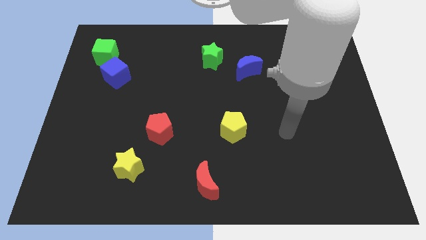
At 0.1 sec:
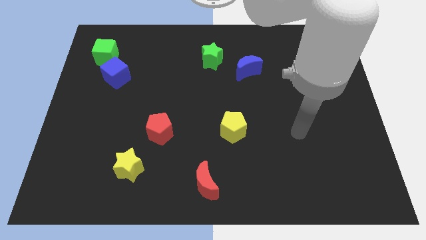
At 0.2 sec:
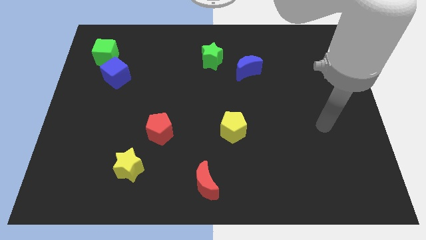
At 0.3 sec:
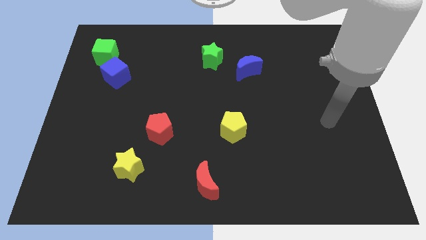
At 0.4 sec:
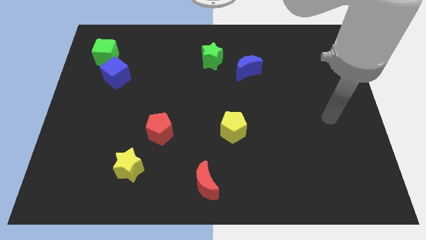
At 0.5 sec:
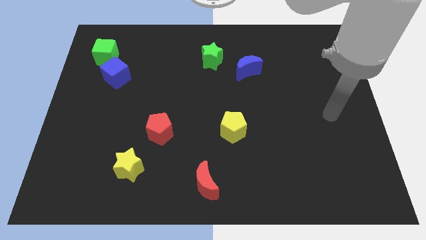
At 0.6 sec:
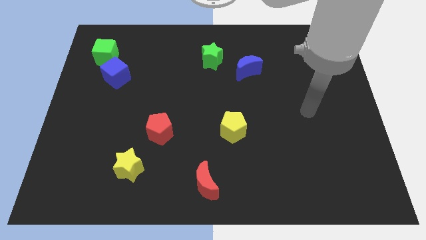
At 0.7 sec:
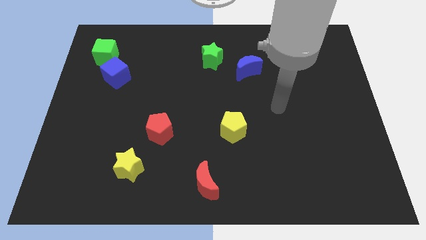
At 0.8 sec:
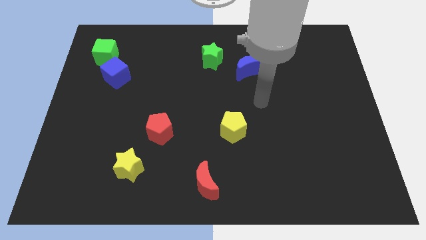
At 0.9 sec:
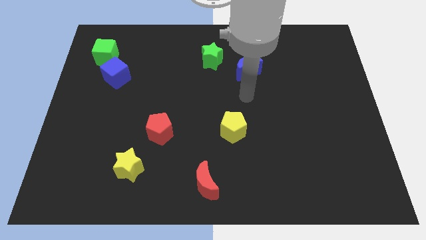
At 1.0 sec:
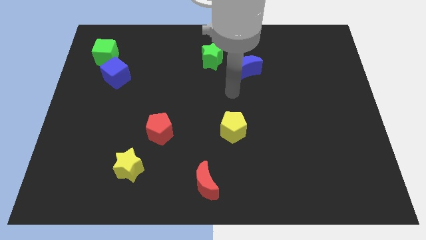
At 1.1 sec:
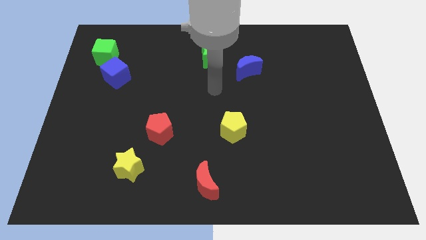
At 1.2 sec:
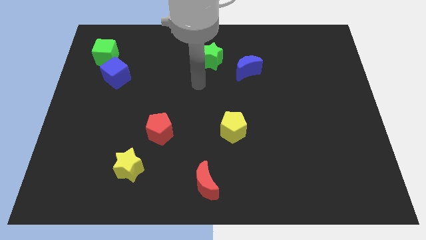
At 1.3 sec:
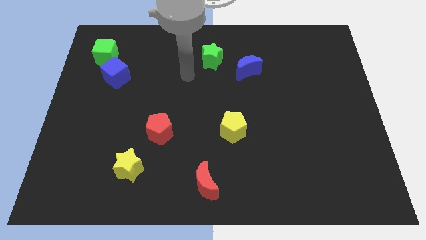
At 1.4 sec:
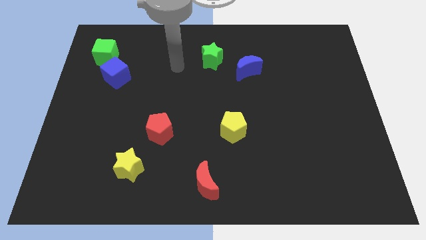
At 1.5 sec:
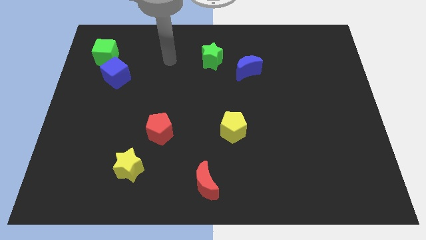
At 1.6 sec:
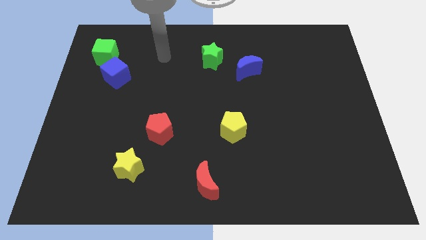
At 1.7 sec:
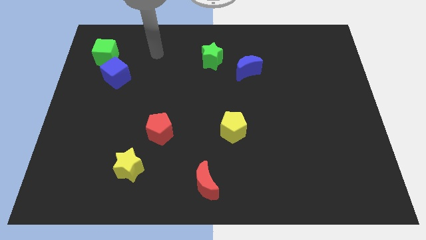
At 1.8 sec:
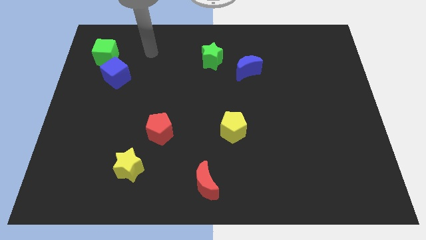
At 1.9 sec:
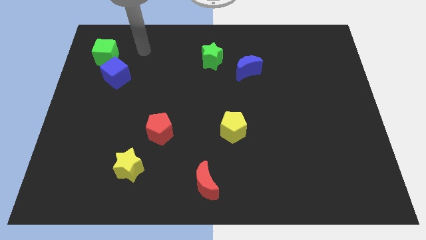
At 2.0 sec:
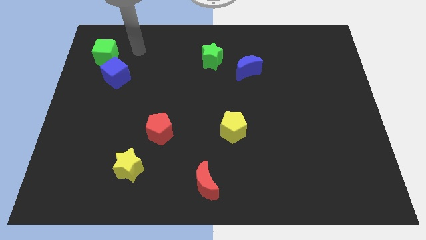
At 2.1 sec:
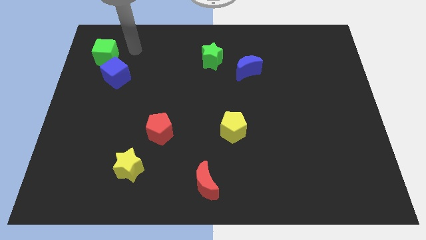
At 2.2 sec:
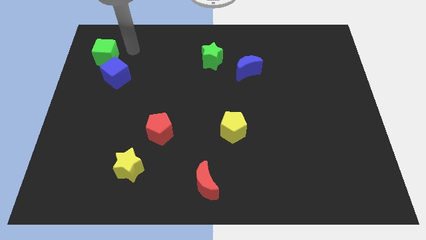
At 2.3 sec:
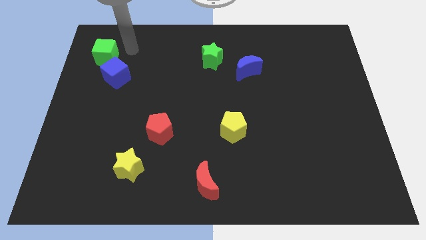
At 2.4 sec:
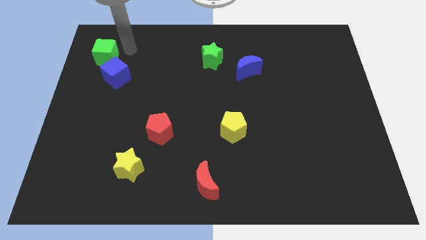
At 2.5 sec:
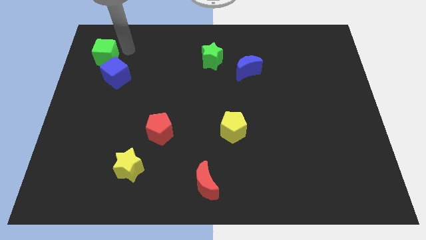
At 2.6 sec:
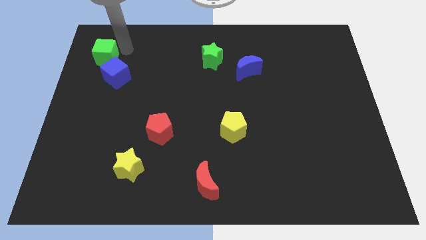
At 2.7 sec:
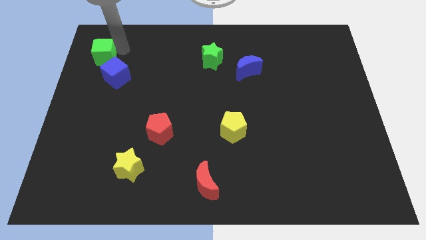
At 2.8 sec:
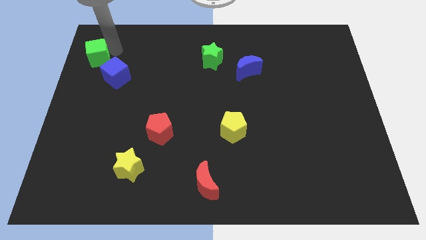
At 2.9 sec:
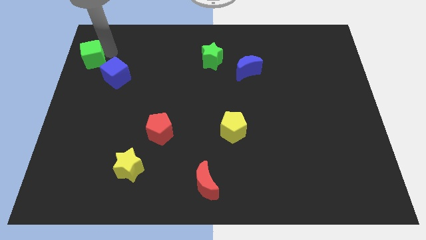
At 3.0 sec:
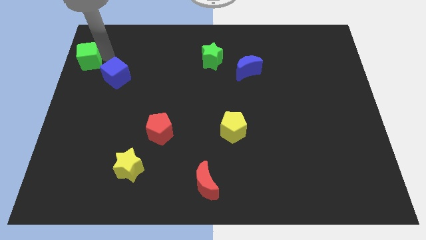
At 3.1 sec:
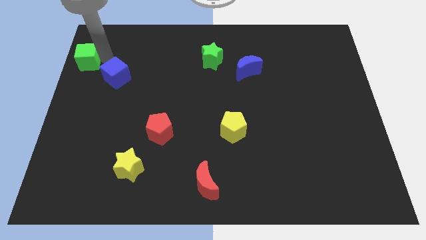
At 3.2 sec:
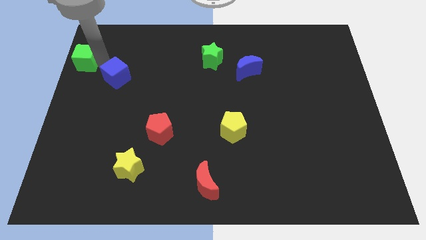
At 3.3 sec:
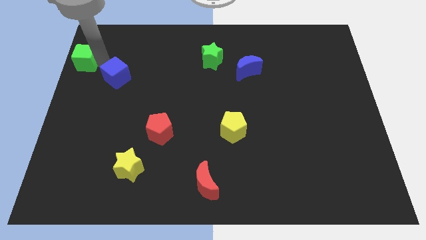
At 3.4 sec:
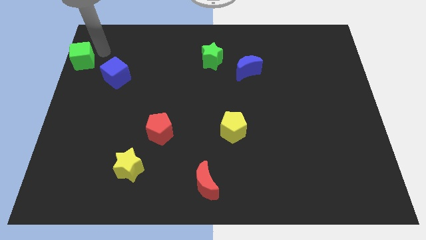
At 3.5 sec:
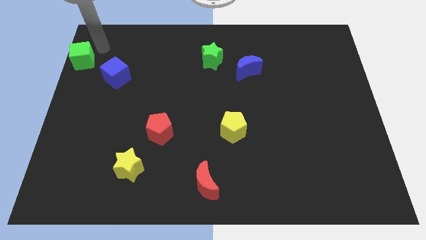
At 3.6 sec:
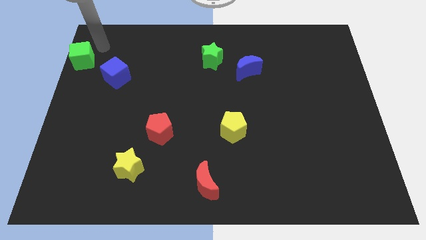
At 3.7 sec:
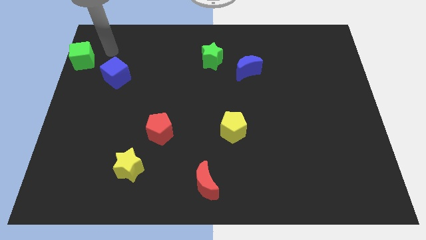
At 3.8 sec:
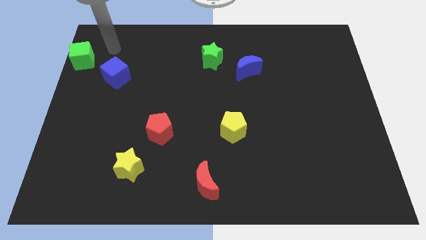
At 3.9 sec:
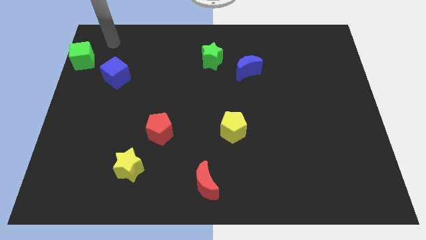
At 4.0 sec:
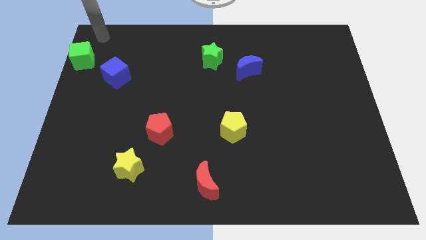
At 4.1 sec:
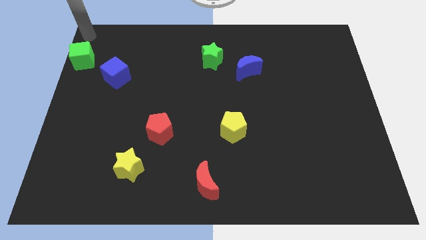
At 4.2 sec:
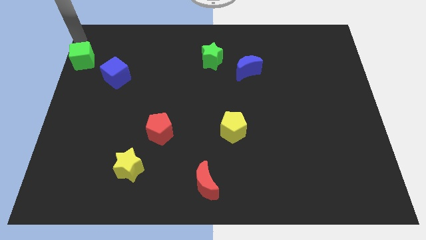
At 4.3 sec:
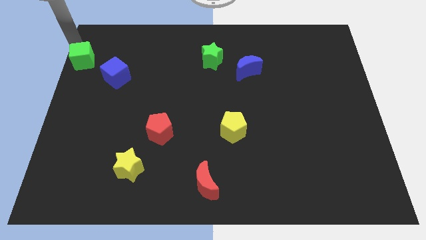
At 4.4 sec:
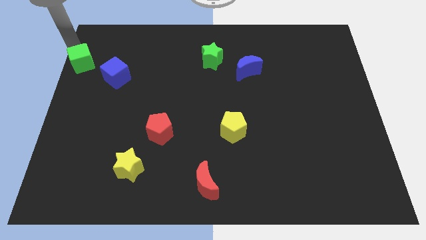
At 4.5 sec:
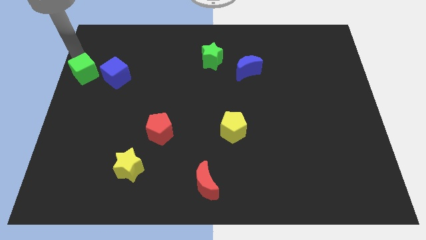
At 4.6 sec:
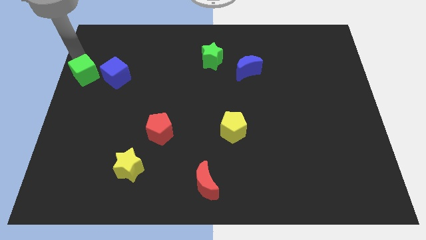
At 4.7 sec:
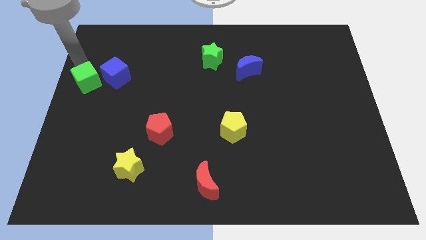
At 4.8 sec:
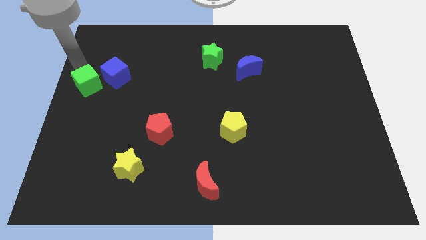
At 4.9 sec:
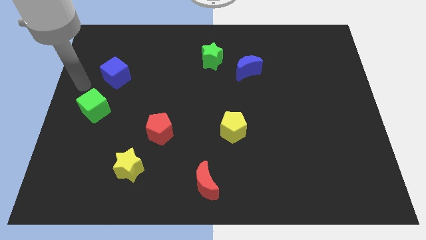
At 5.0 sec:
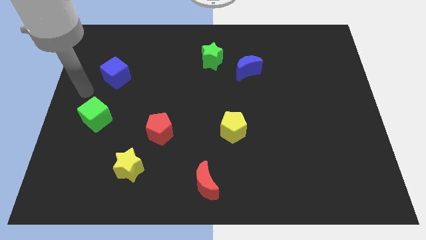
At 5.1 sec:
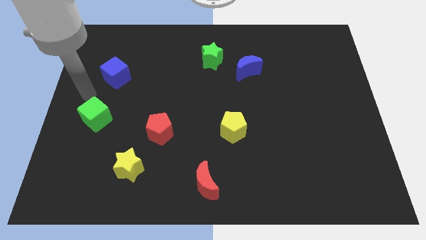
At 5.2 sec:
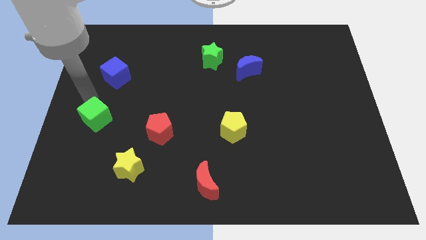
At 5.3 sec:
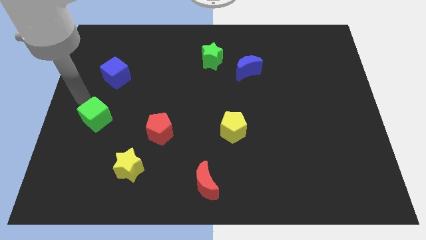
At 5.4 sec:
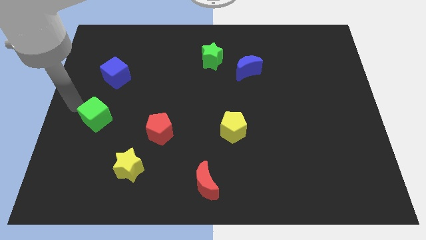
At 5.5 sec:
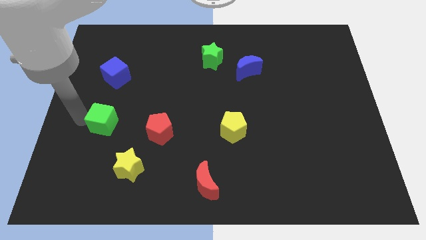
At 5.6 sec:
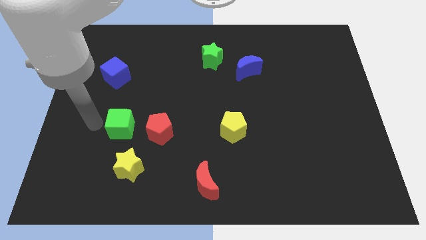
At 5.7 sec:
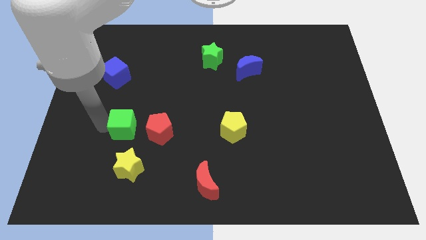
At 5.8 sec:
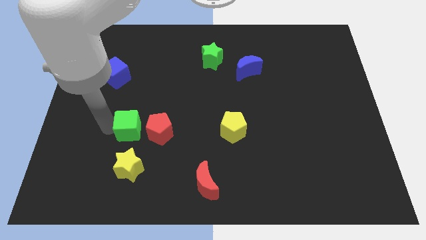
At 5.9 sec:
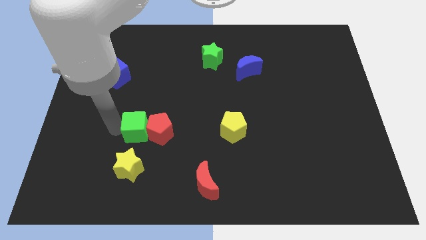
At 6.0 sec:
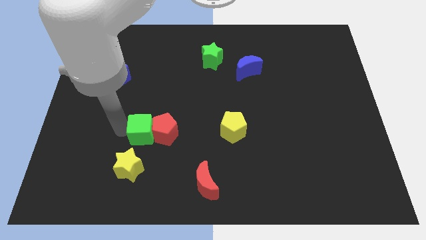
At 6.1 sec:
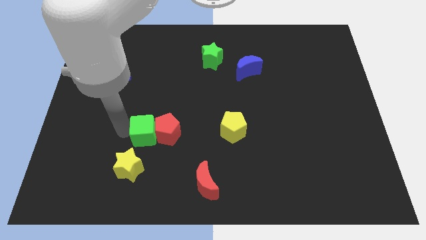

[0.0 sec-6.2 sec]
put the green cube towards the red pentagon

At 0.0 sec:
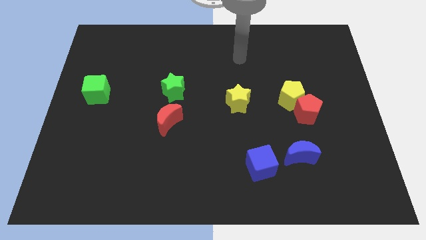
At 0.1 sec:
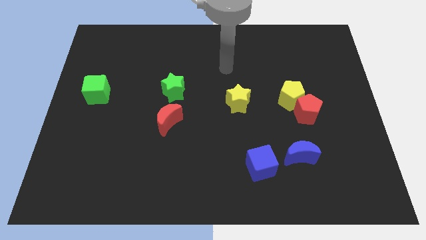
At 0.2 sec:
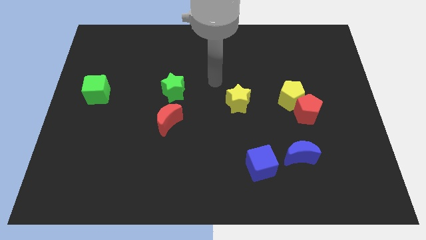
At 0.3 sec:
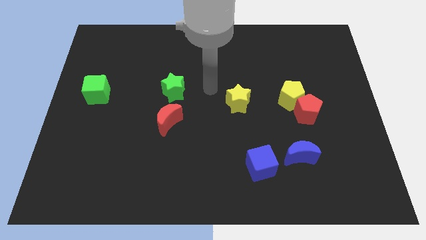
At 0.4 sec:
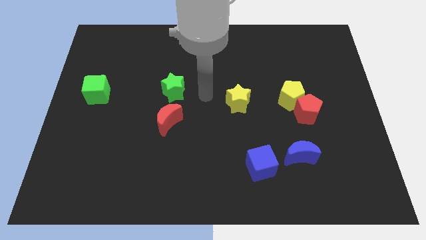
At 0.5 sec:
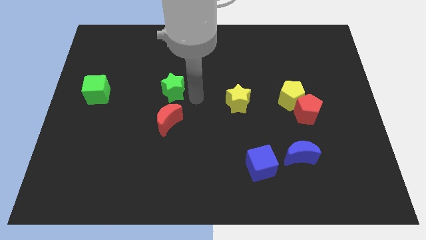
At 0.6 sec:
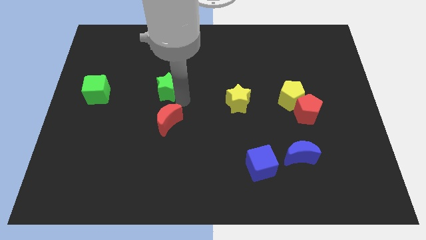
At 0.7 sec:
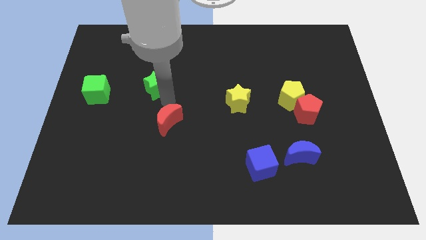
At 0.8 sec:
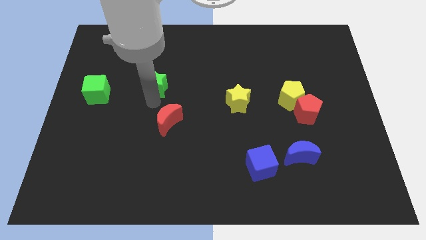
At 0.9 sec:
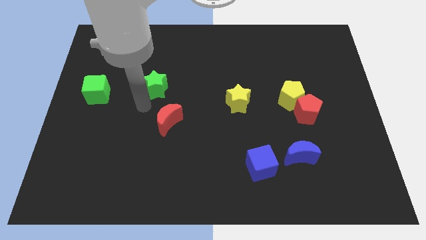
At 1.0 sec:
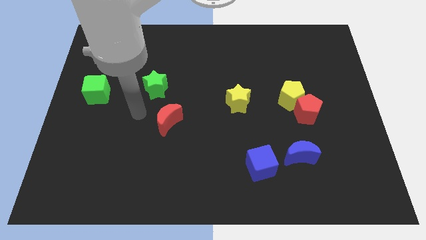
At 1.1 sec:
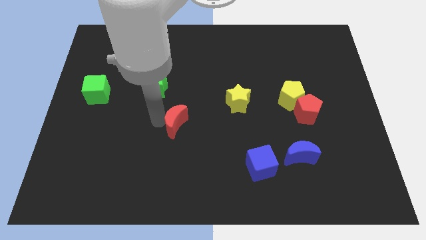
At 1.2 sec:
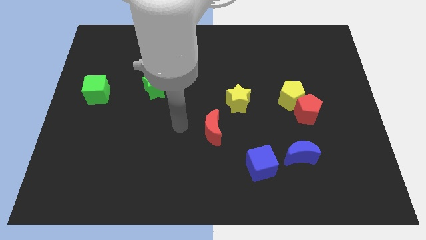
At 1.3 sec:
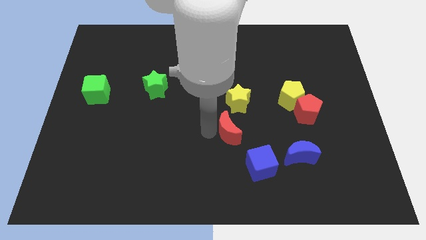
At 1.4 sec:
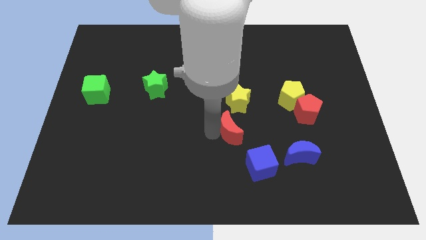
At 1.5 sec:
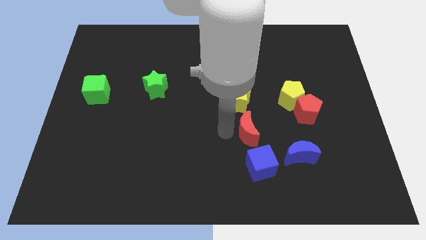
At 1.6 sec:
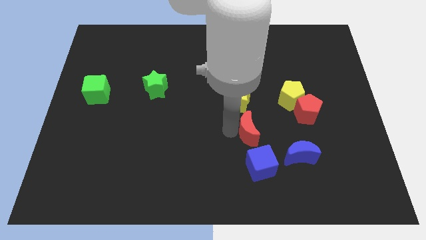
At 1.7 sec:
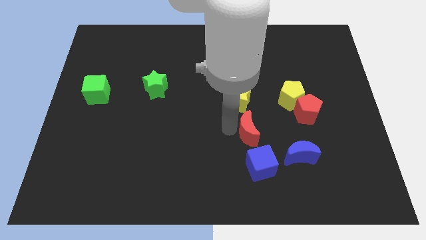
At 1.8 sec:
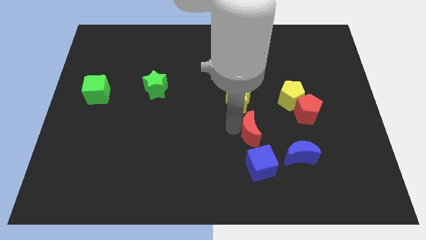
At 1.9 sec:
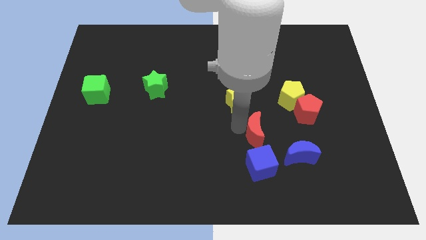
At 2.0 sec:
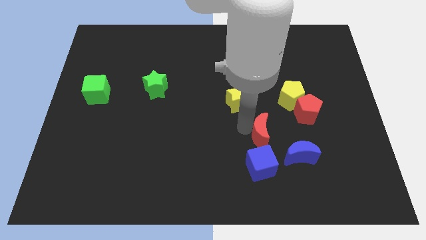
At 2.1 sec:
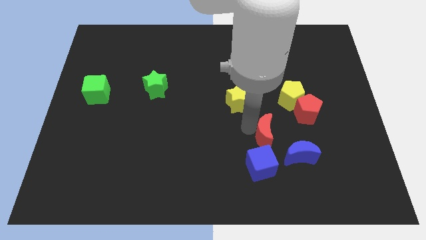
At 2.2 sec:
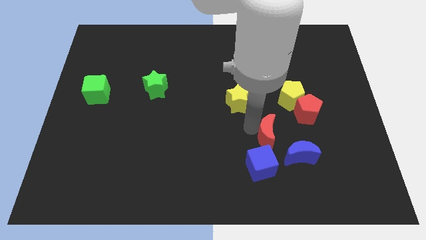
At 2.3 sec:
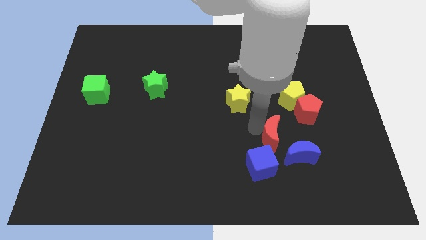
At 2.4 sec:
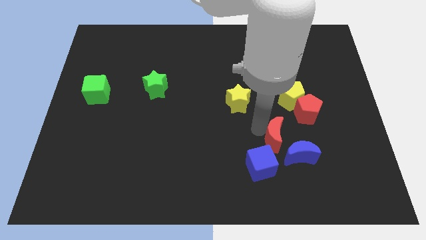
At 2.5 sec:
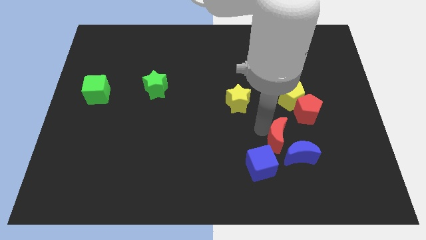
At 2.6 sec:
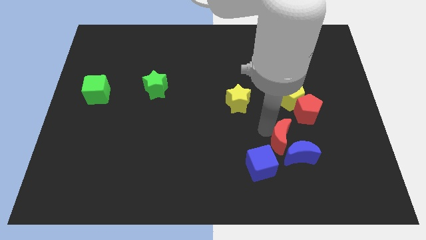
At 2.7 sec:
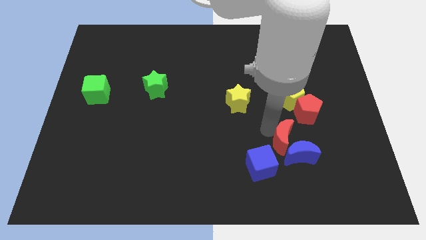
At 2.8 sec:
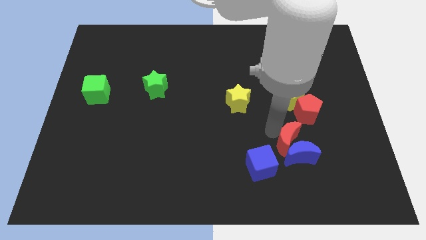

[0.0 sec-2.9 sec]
put the red moon towards the blue moon
